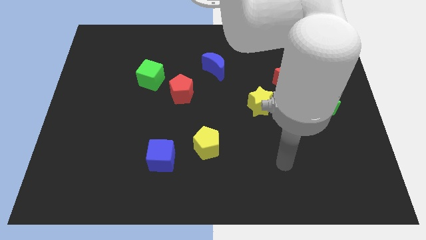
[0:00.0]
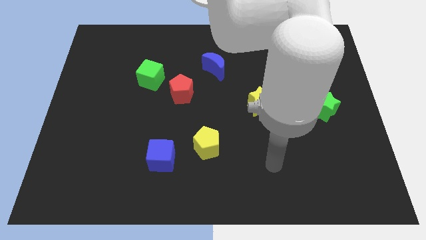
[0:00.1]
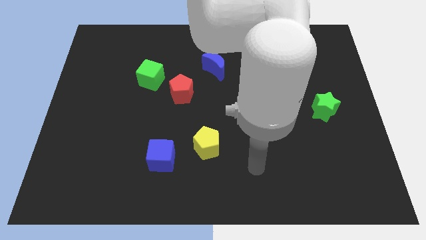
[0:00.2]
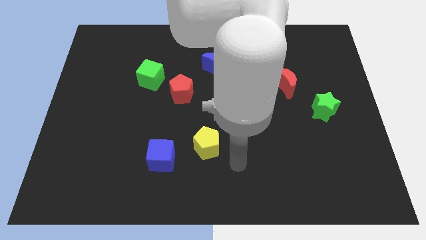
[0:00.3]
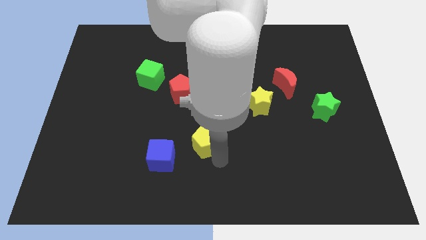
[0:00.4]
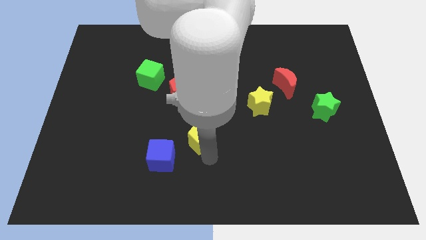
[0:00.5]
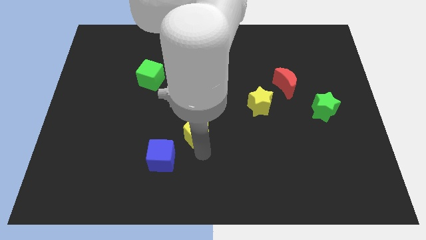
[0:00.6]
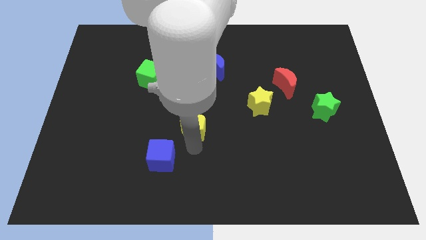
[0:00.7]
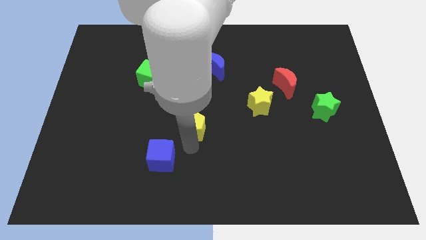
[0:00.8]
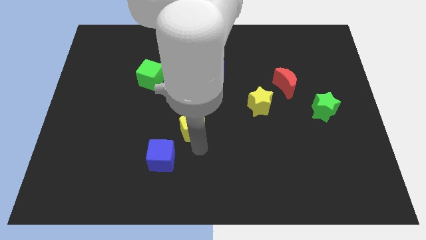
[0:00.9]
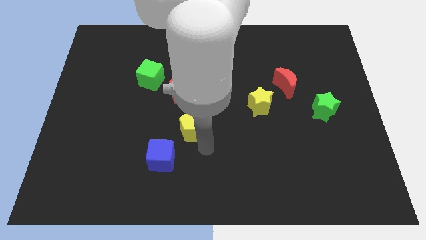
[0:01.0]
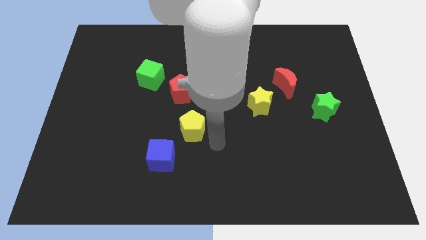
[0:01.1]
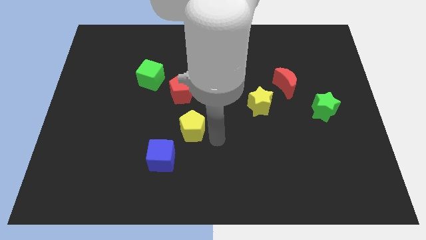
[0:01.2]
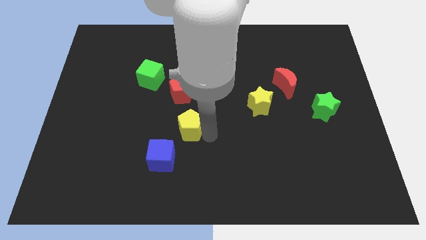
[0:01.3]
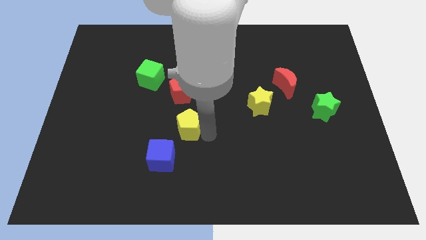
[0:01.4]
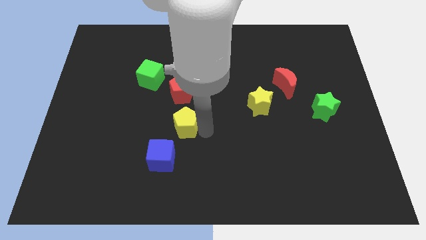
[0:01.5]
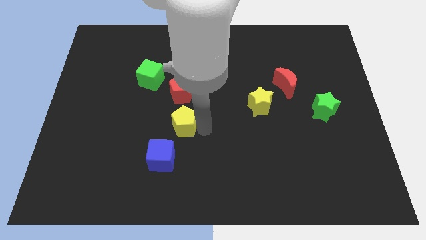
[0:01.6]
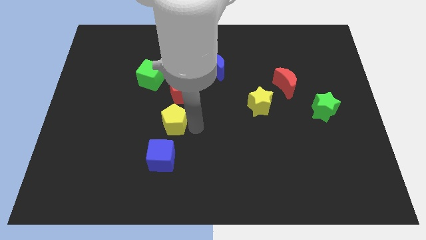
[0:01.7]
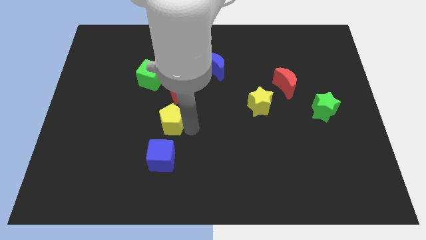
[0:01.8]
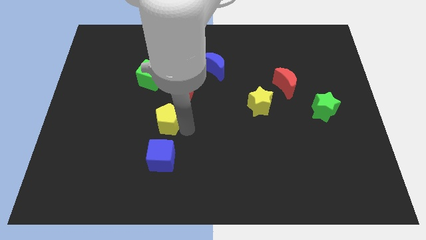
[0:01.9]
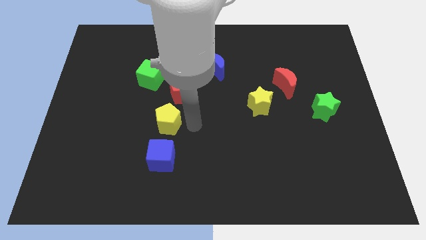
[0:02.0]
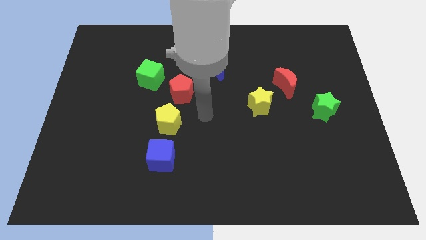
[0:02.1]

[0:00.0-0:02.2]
place the yellow pentagon between red pentagon and blue cube

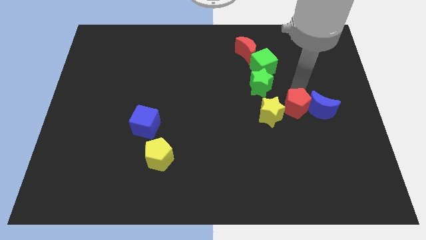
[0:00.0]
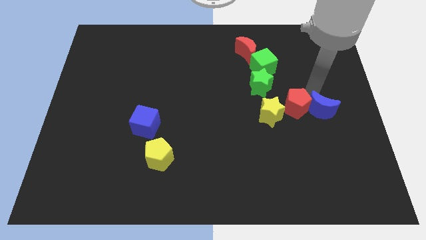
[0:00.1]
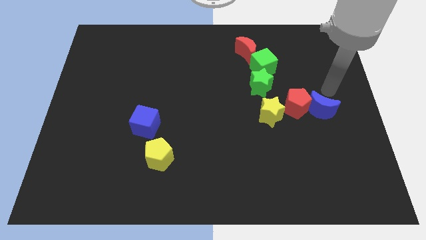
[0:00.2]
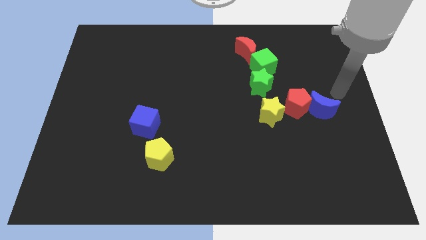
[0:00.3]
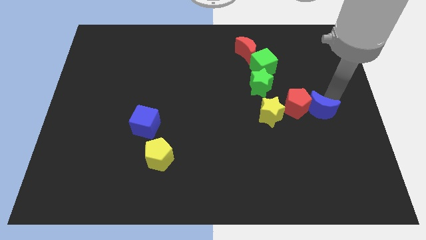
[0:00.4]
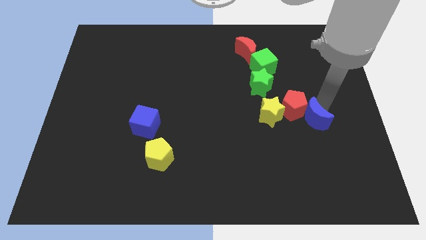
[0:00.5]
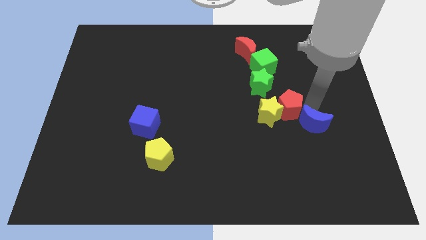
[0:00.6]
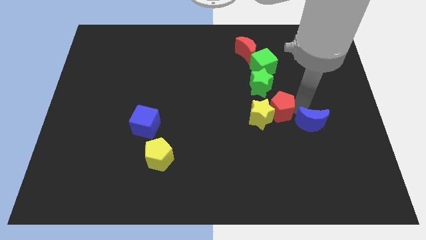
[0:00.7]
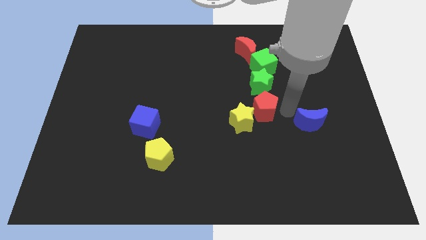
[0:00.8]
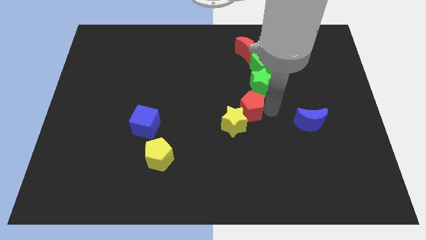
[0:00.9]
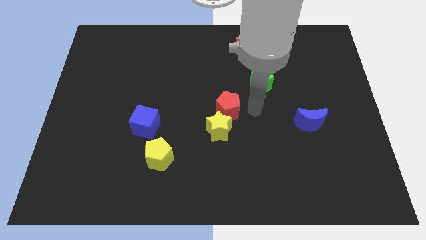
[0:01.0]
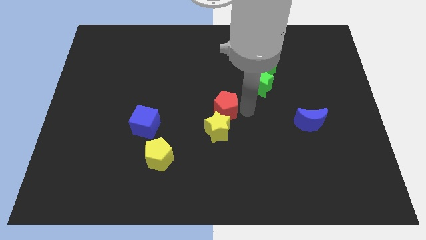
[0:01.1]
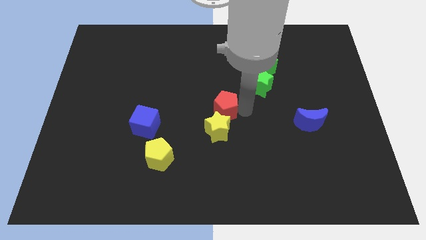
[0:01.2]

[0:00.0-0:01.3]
move the red pentagon away from the blue cube

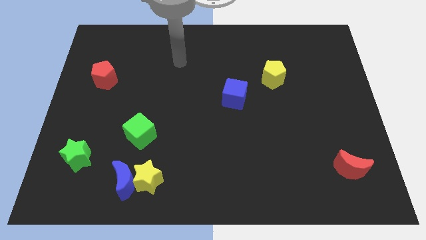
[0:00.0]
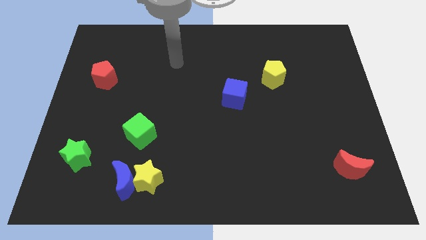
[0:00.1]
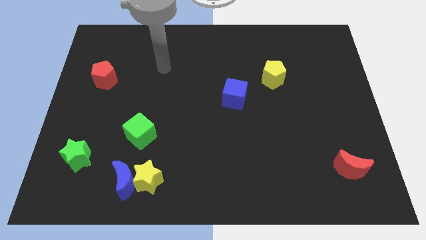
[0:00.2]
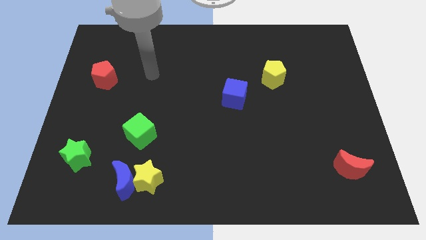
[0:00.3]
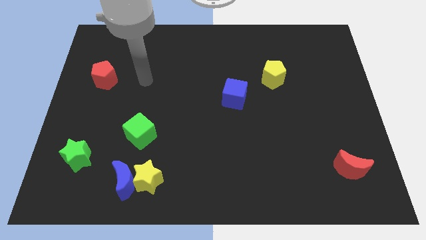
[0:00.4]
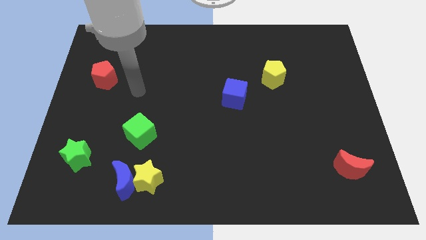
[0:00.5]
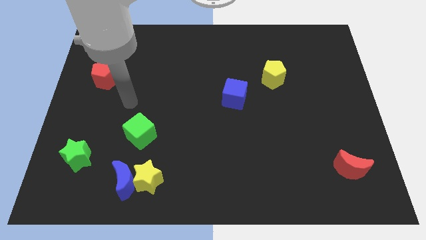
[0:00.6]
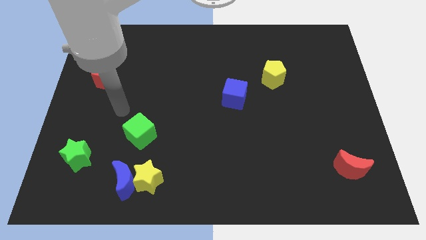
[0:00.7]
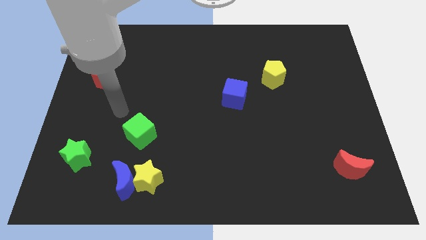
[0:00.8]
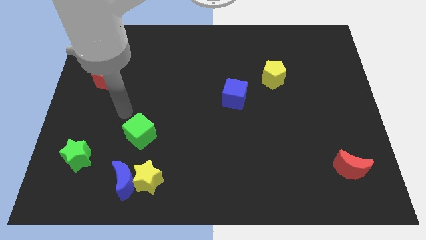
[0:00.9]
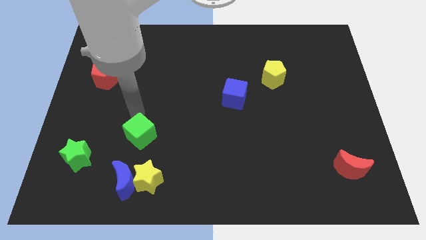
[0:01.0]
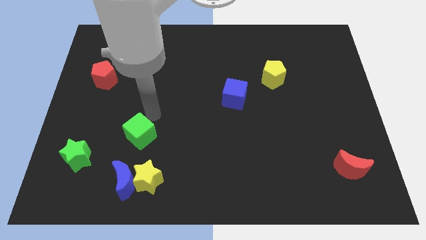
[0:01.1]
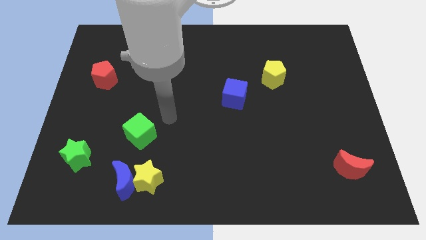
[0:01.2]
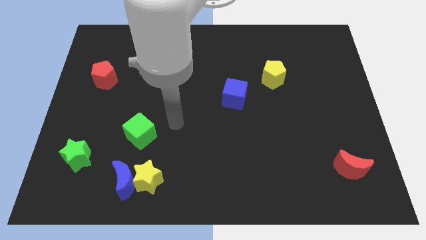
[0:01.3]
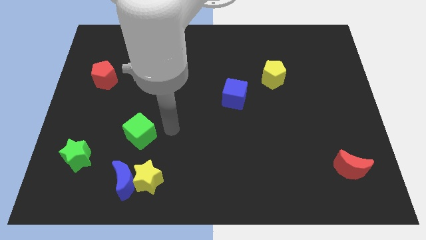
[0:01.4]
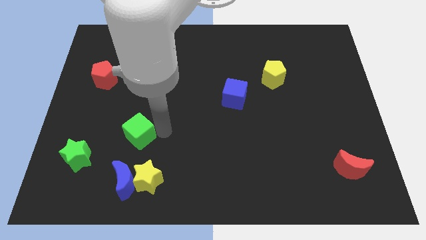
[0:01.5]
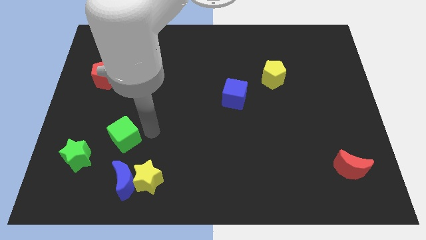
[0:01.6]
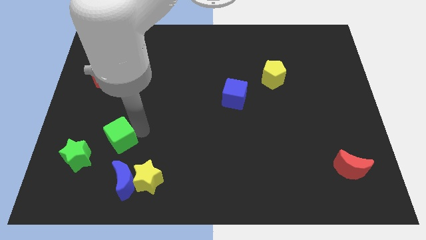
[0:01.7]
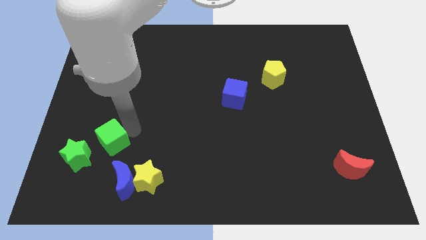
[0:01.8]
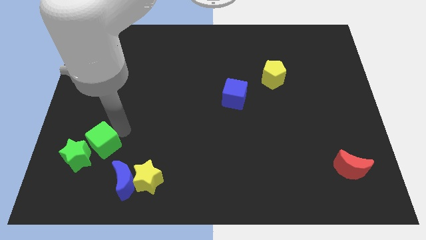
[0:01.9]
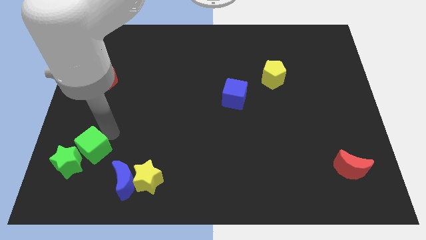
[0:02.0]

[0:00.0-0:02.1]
push the green cube into the green star

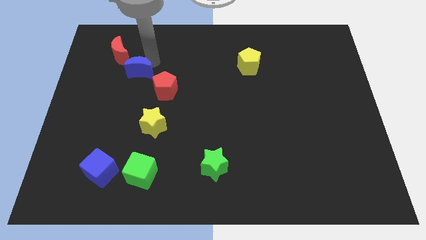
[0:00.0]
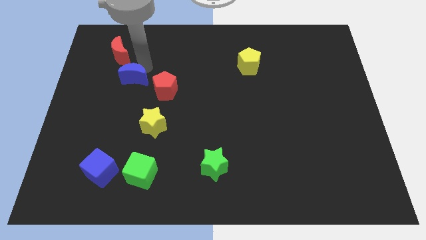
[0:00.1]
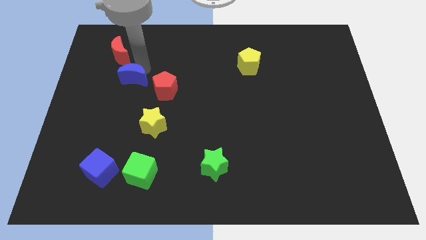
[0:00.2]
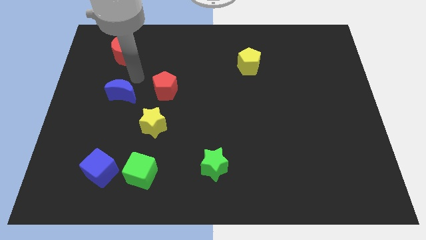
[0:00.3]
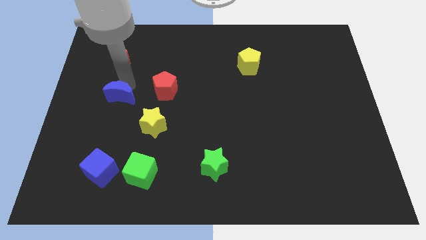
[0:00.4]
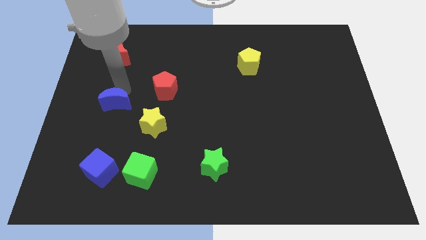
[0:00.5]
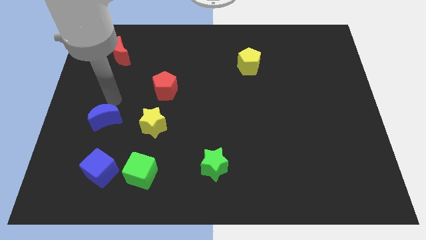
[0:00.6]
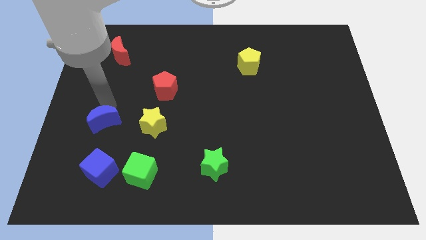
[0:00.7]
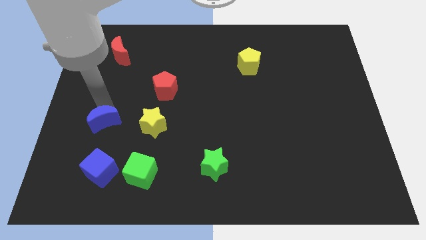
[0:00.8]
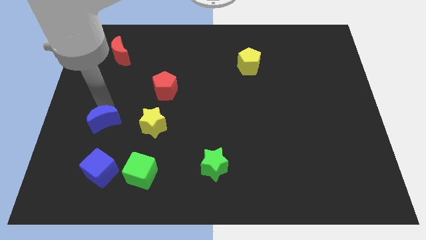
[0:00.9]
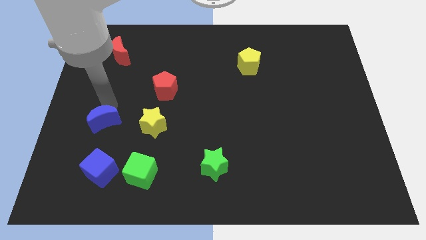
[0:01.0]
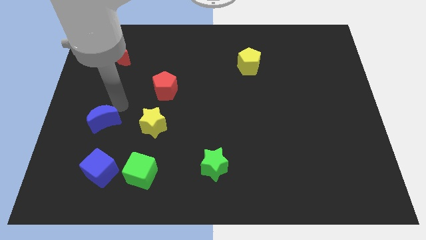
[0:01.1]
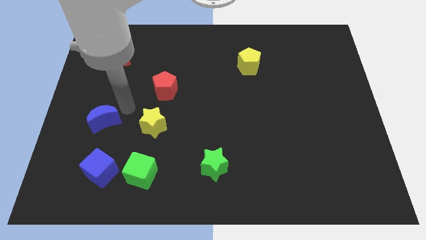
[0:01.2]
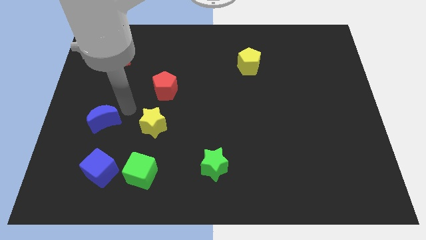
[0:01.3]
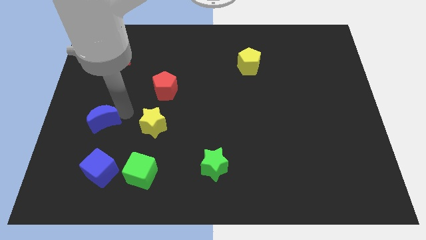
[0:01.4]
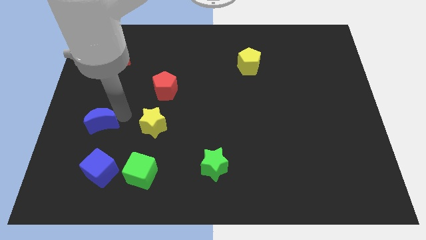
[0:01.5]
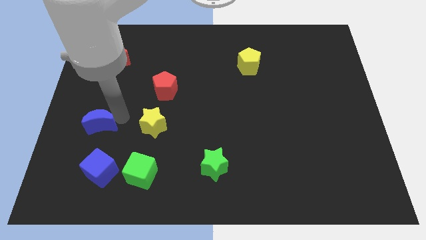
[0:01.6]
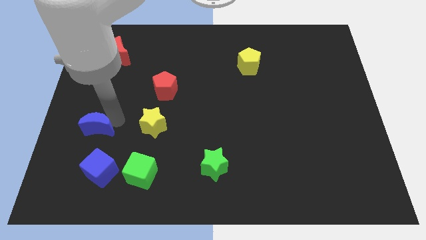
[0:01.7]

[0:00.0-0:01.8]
drag the blue moon slightly down

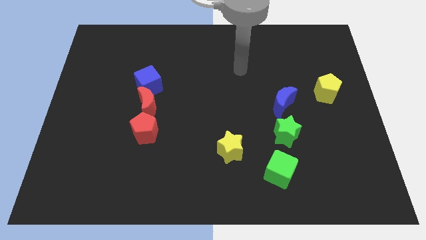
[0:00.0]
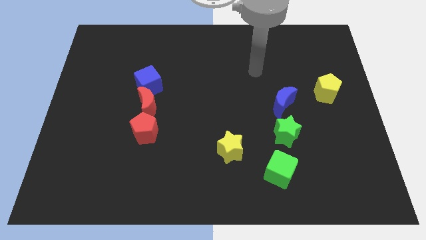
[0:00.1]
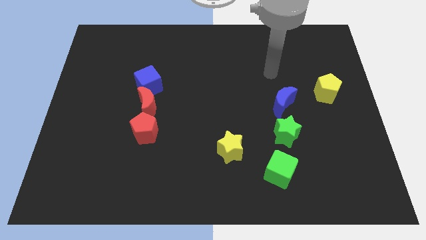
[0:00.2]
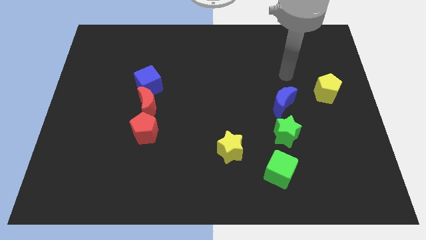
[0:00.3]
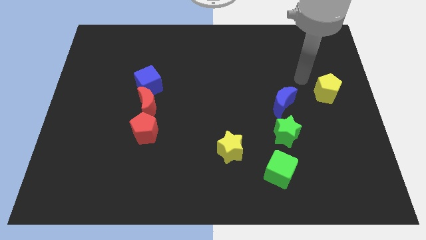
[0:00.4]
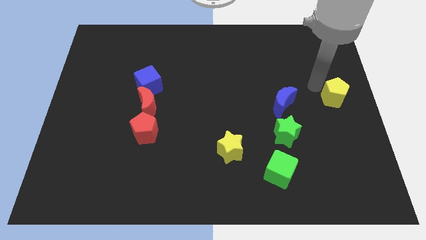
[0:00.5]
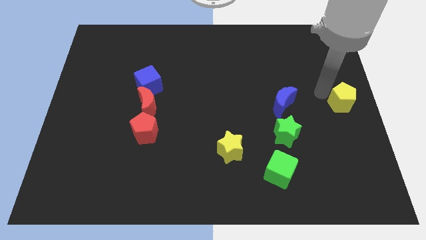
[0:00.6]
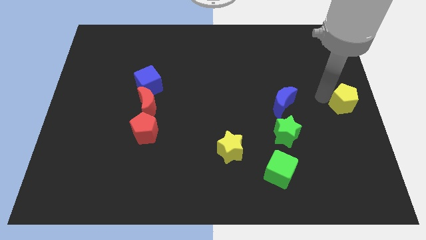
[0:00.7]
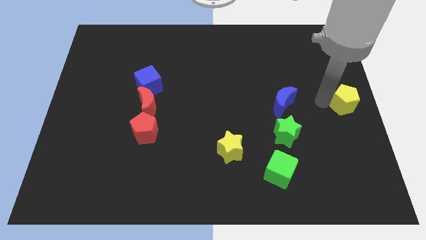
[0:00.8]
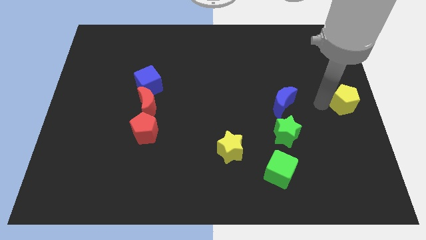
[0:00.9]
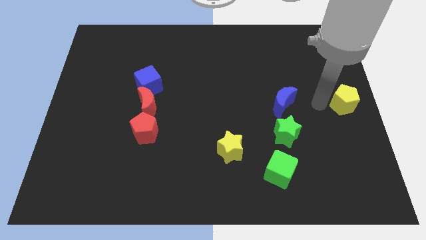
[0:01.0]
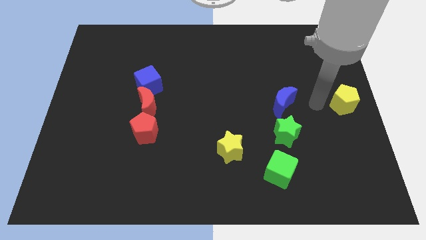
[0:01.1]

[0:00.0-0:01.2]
slightly push the yellow pentagon to the right of blue crescent

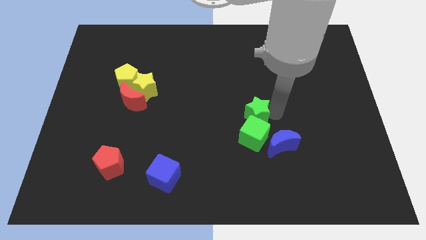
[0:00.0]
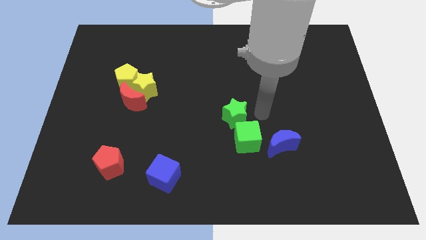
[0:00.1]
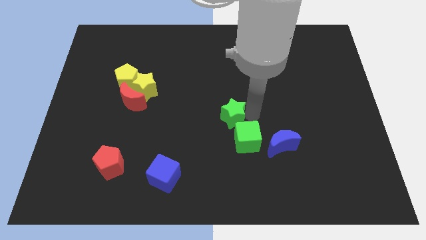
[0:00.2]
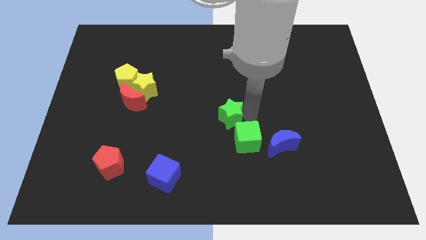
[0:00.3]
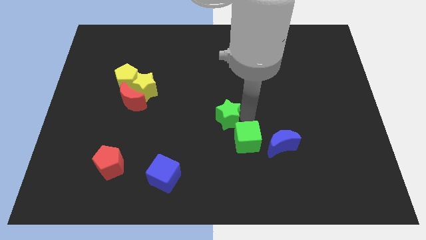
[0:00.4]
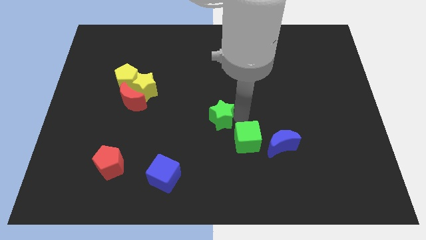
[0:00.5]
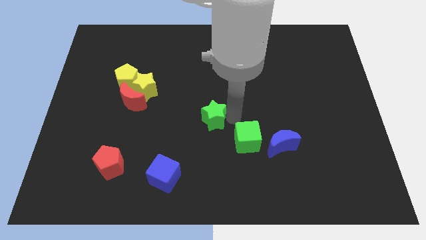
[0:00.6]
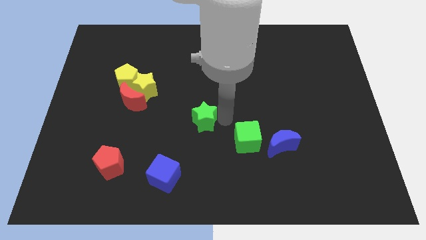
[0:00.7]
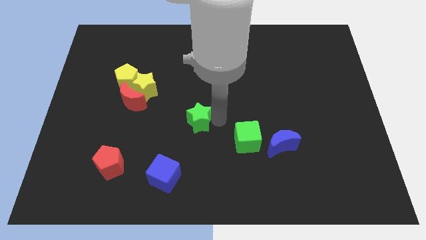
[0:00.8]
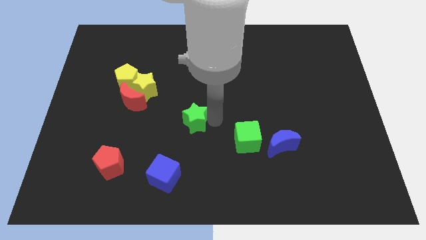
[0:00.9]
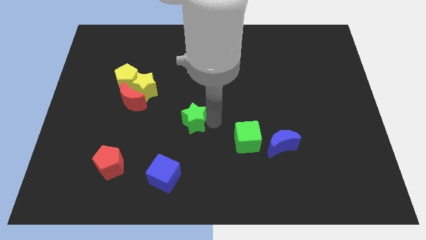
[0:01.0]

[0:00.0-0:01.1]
separate green star from green cube
